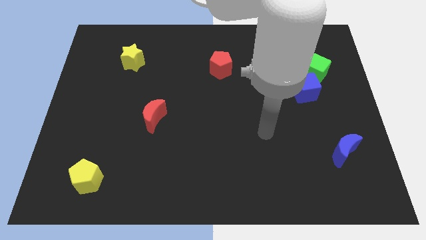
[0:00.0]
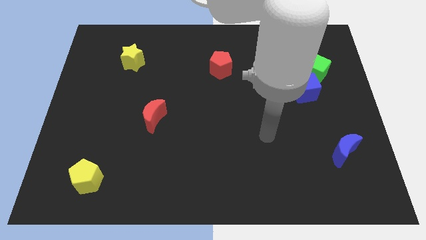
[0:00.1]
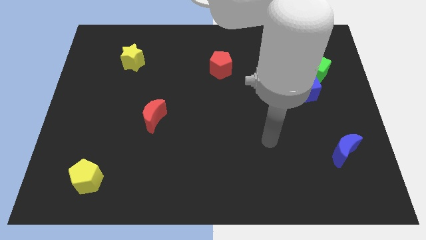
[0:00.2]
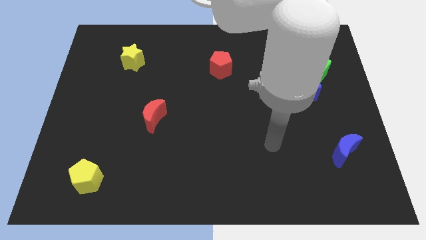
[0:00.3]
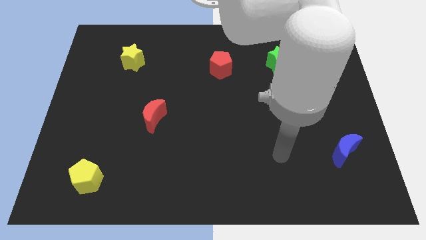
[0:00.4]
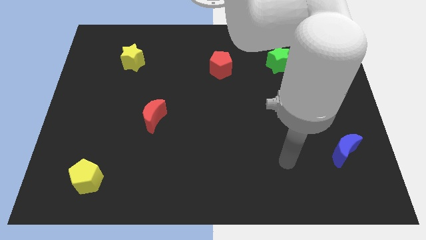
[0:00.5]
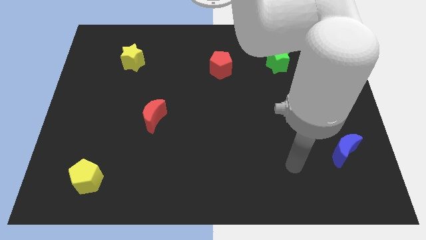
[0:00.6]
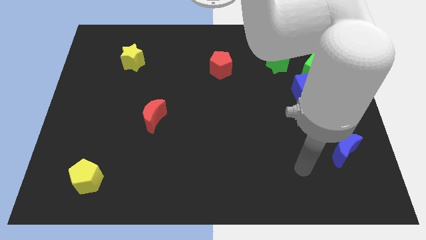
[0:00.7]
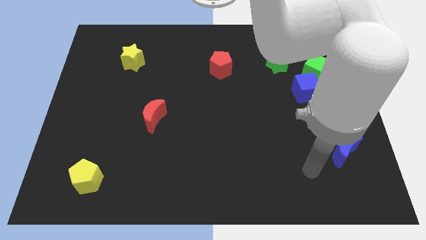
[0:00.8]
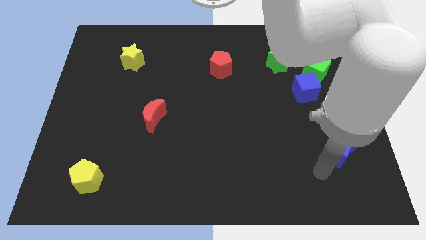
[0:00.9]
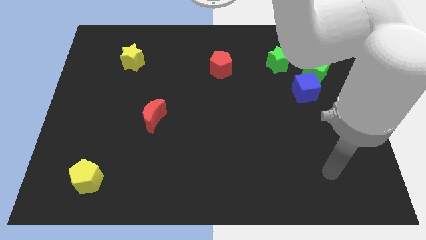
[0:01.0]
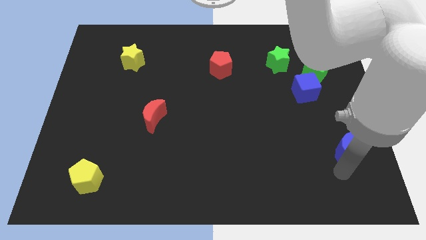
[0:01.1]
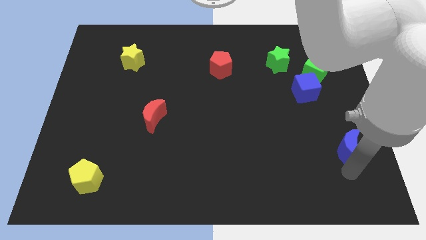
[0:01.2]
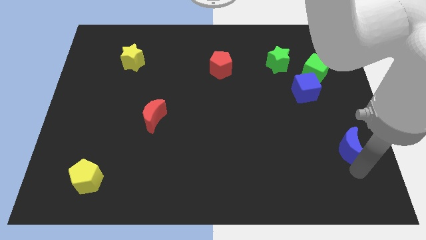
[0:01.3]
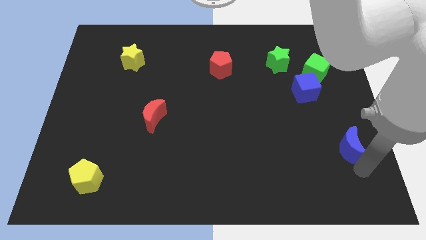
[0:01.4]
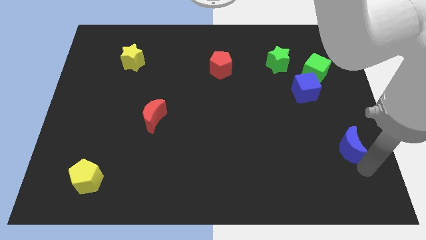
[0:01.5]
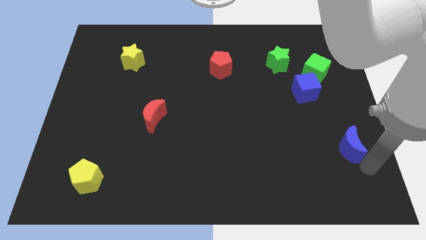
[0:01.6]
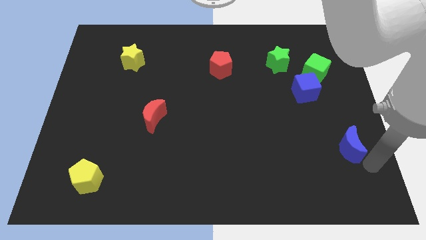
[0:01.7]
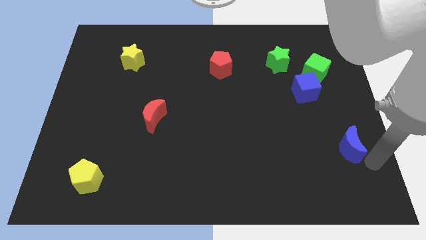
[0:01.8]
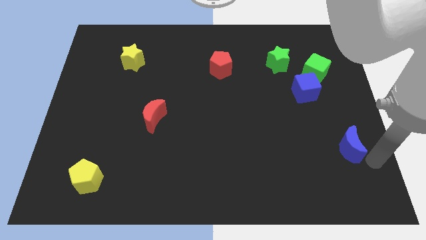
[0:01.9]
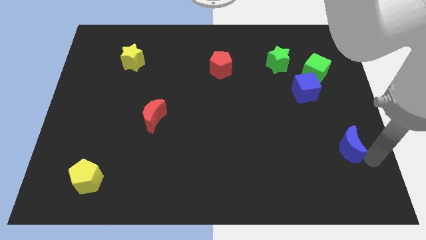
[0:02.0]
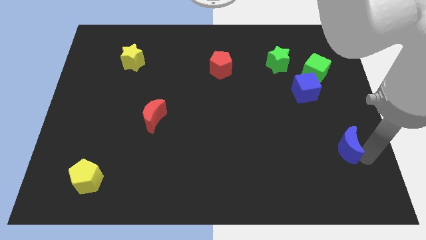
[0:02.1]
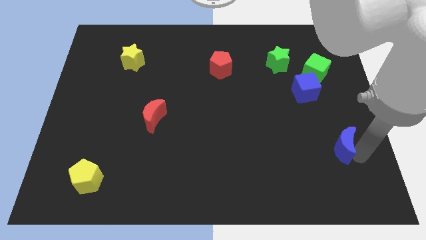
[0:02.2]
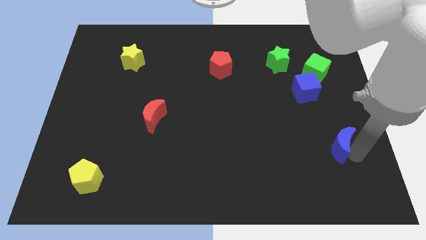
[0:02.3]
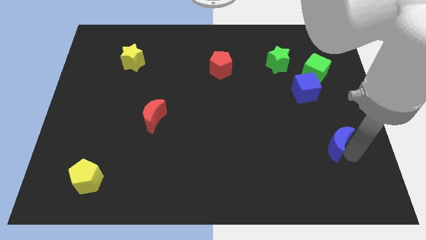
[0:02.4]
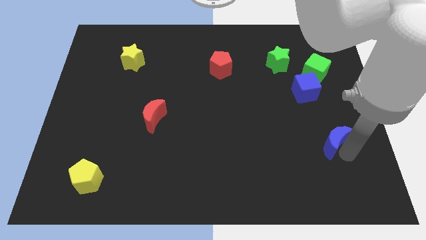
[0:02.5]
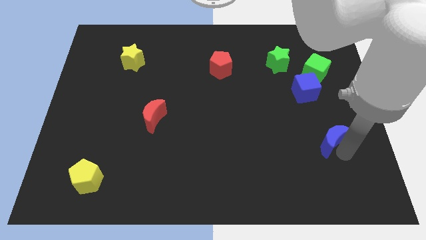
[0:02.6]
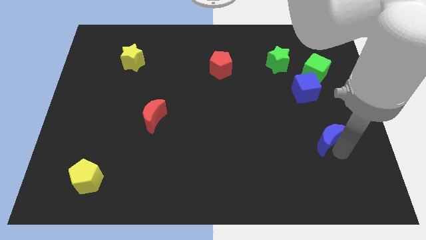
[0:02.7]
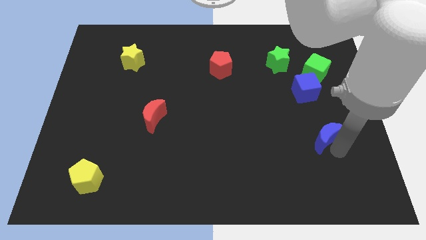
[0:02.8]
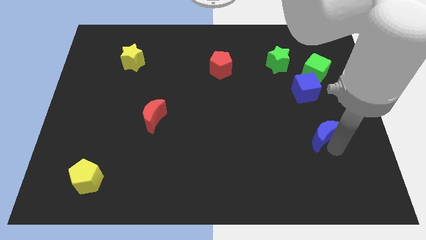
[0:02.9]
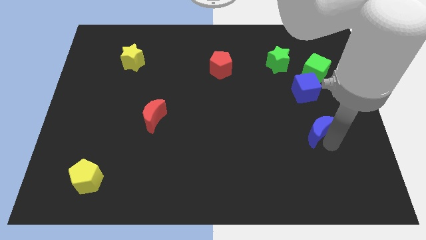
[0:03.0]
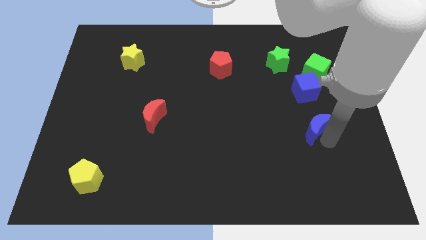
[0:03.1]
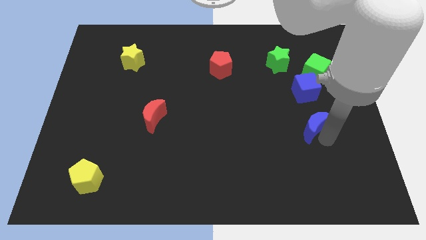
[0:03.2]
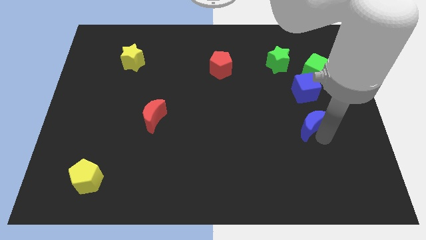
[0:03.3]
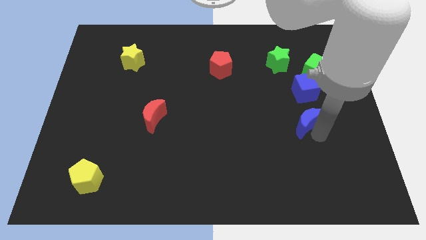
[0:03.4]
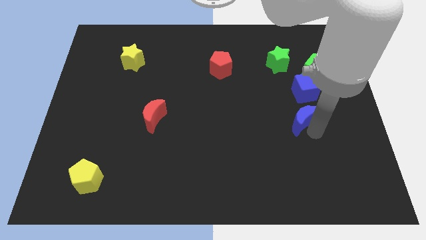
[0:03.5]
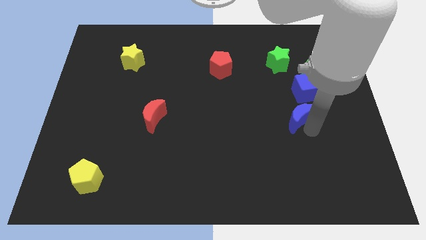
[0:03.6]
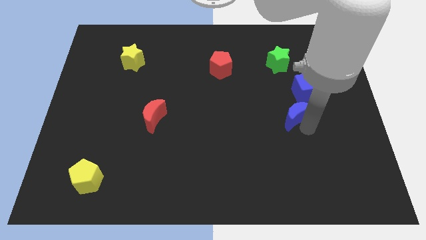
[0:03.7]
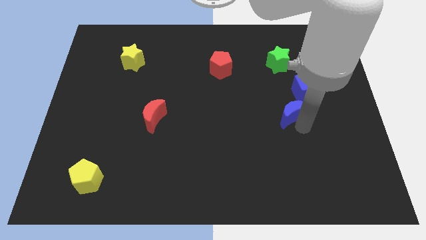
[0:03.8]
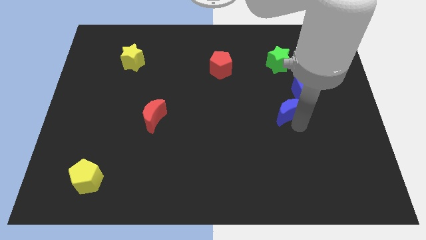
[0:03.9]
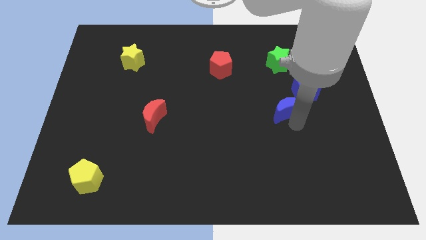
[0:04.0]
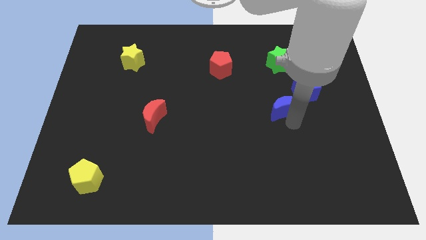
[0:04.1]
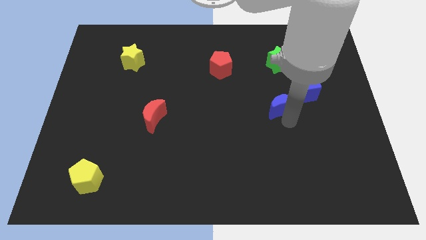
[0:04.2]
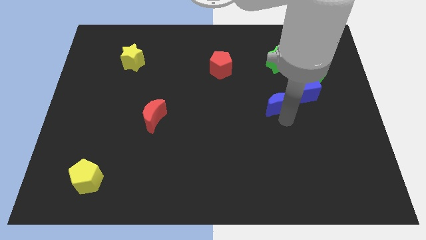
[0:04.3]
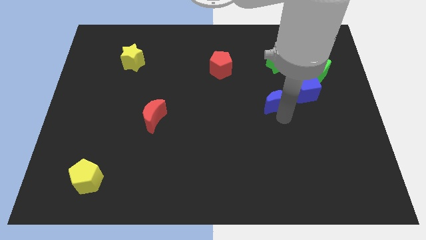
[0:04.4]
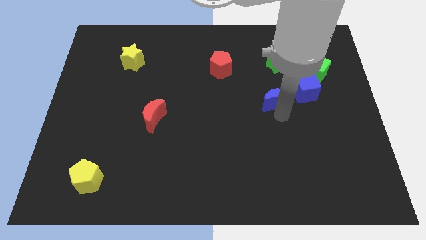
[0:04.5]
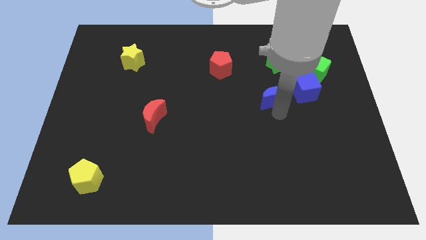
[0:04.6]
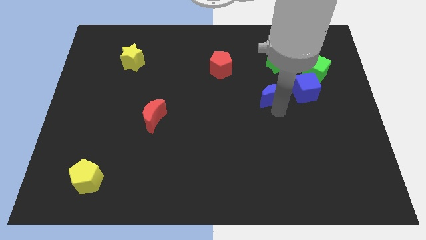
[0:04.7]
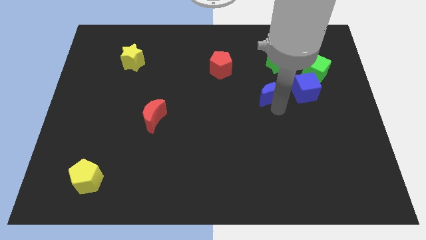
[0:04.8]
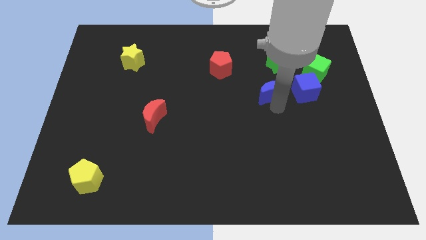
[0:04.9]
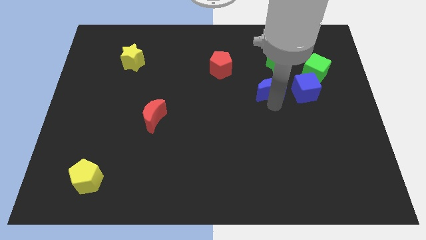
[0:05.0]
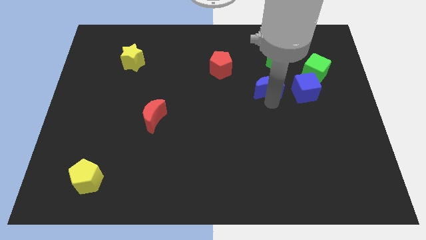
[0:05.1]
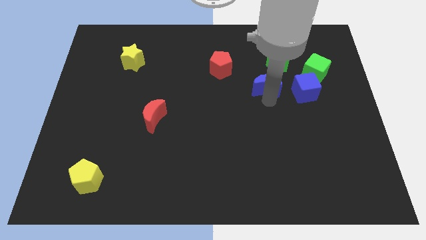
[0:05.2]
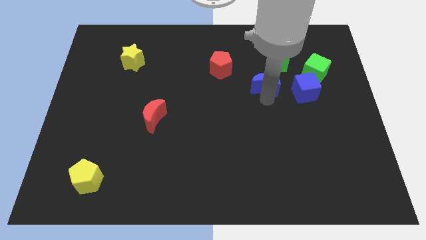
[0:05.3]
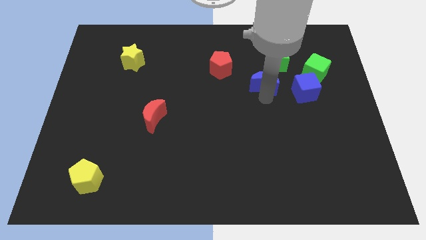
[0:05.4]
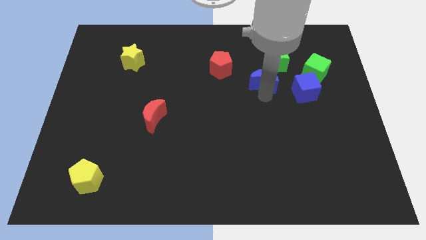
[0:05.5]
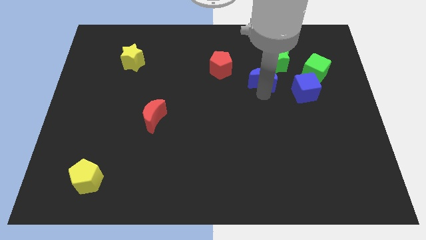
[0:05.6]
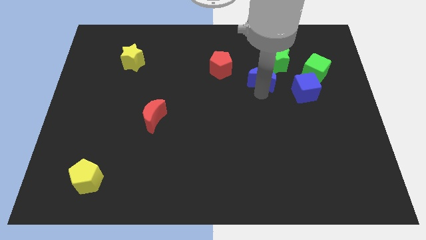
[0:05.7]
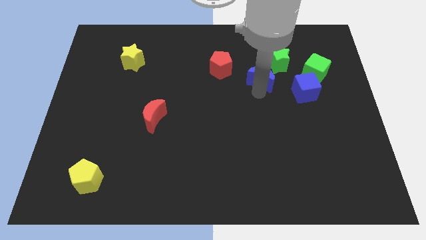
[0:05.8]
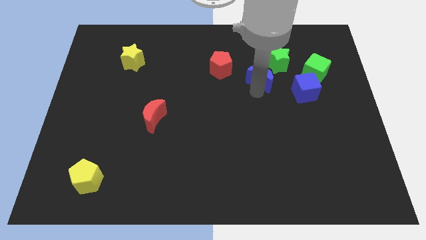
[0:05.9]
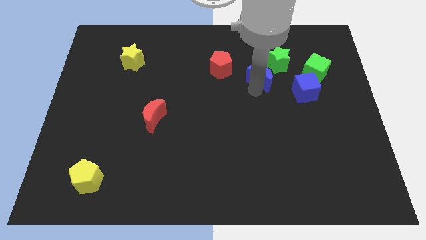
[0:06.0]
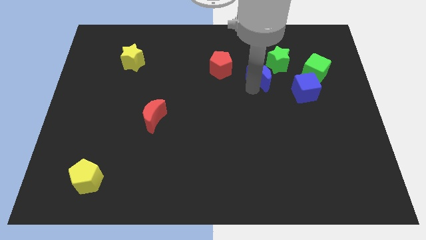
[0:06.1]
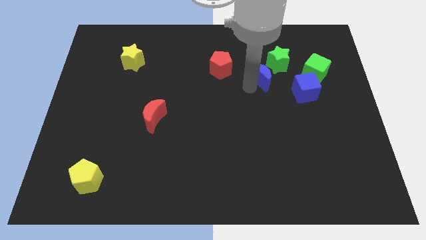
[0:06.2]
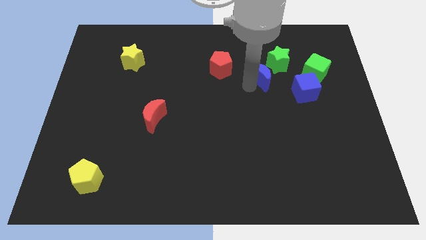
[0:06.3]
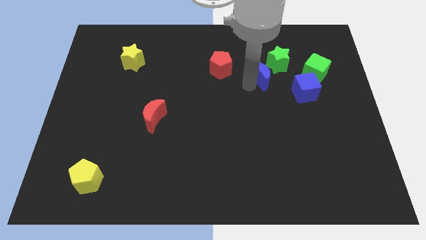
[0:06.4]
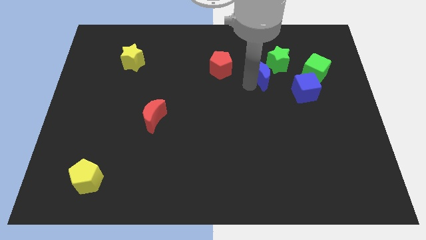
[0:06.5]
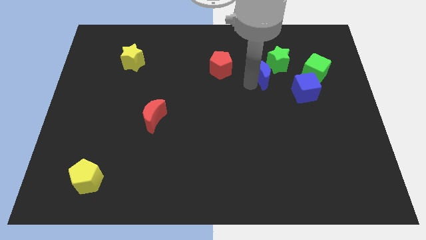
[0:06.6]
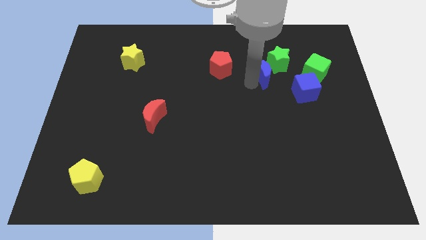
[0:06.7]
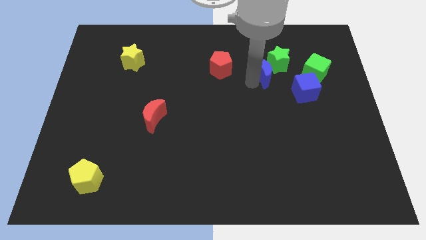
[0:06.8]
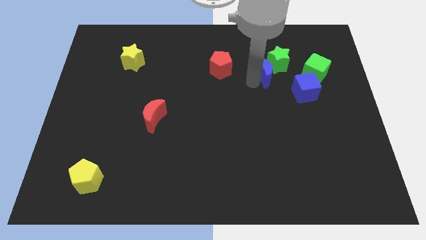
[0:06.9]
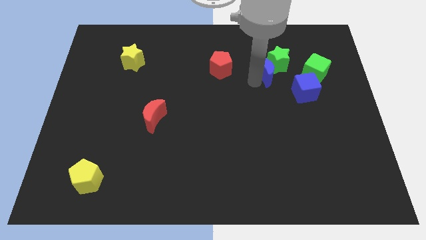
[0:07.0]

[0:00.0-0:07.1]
move the blue moon close to the green star

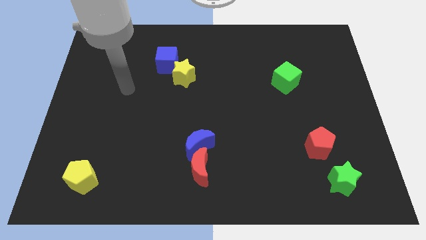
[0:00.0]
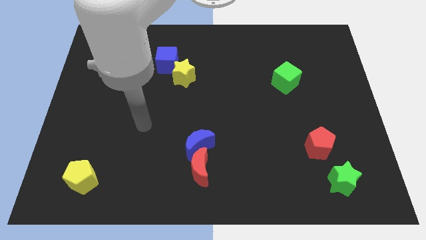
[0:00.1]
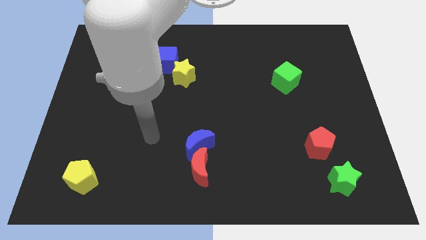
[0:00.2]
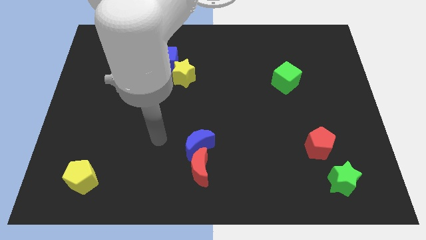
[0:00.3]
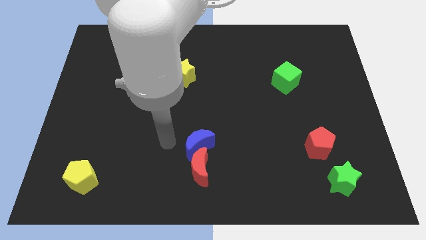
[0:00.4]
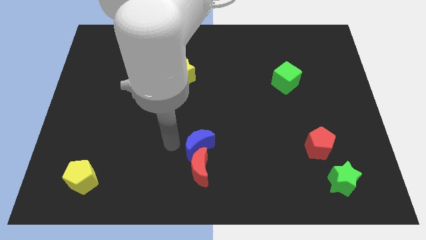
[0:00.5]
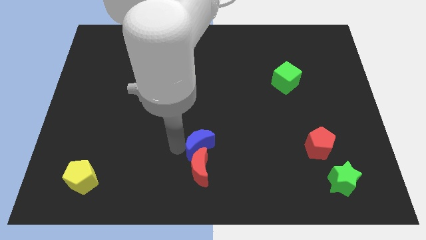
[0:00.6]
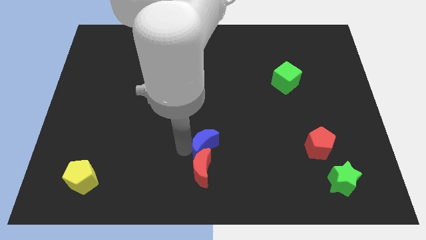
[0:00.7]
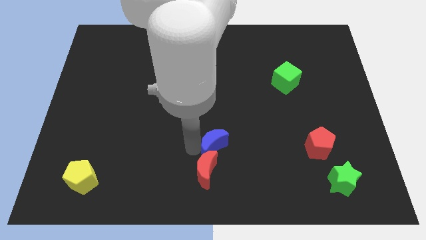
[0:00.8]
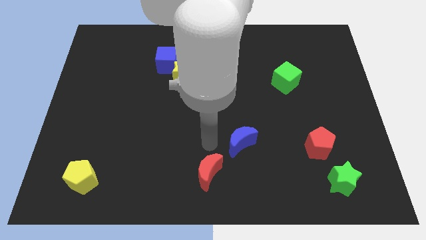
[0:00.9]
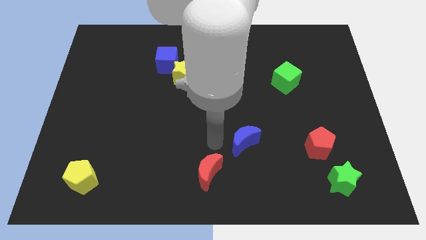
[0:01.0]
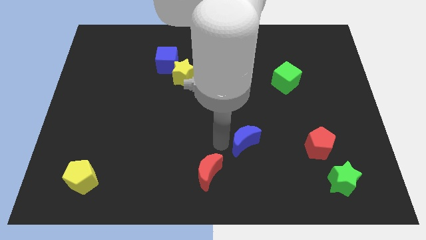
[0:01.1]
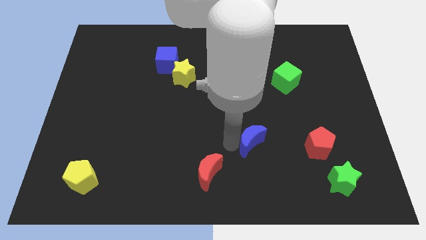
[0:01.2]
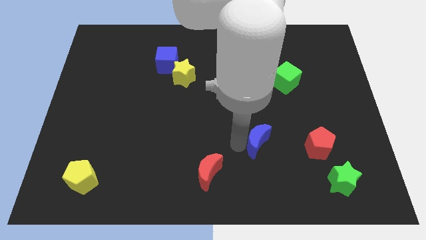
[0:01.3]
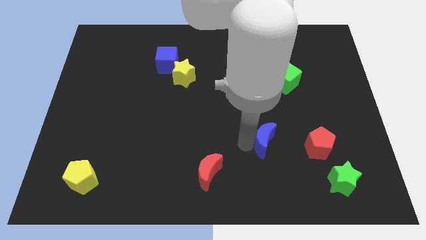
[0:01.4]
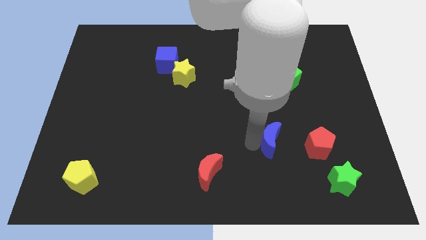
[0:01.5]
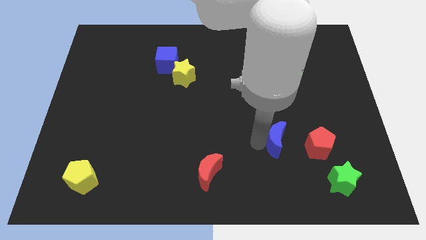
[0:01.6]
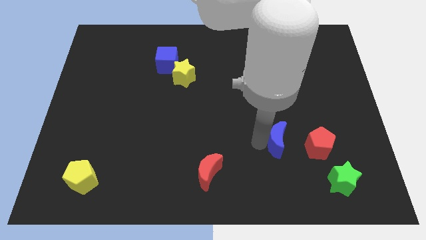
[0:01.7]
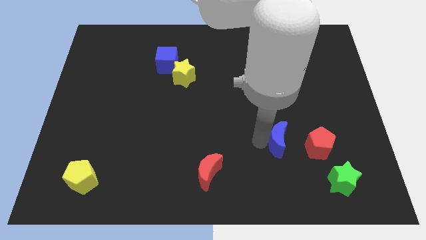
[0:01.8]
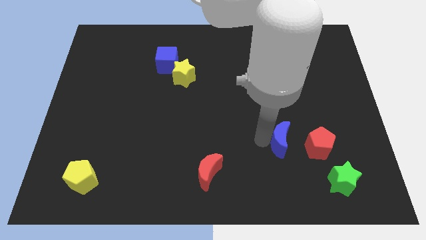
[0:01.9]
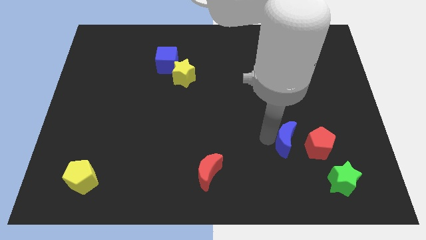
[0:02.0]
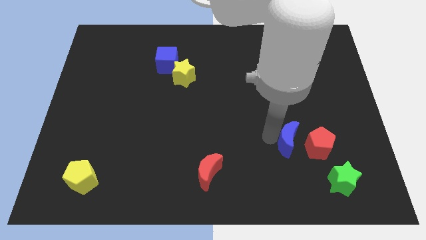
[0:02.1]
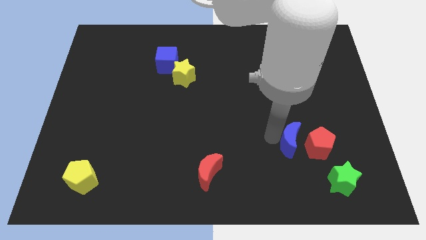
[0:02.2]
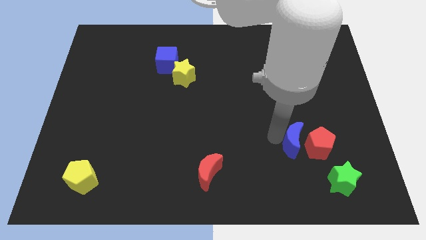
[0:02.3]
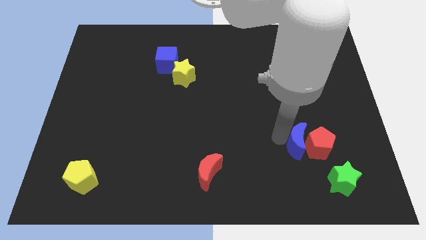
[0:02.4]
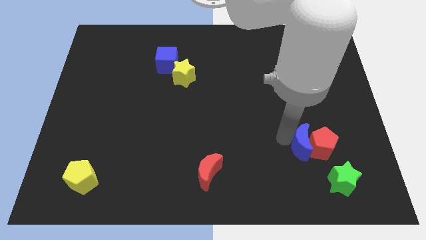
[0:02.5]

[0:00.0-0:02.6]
put the blue moon towards the red pentagon
